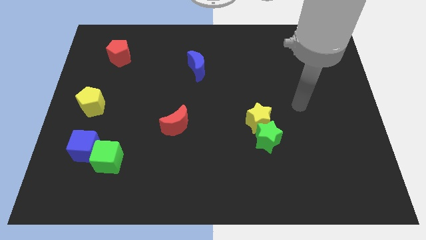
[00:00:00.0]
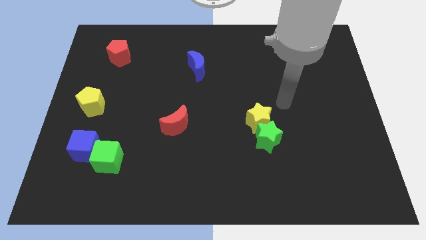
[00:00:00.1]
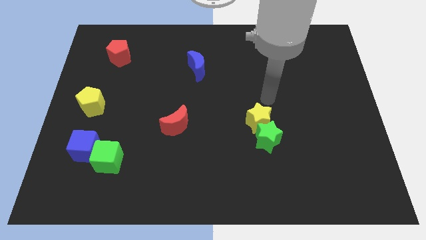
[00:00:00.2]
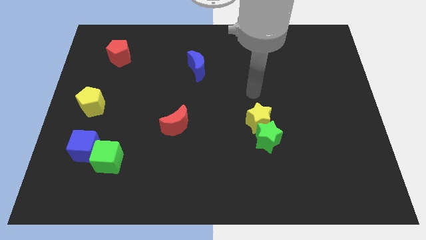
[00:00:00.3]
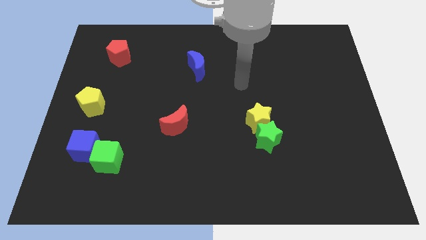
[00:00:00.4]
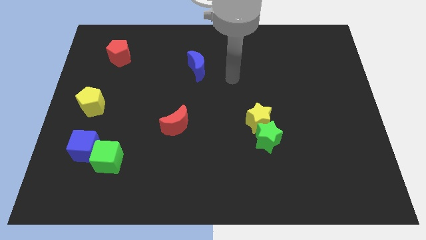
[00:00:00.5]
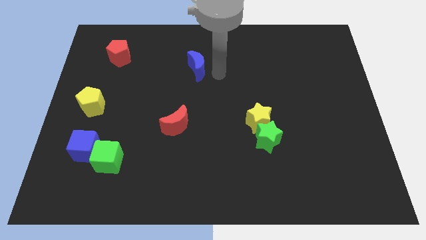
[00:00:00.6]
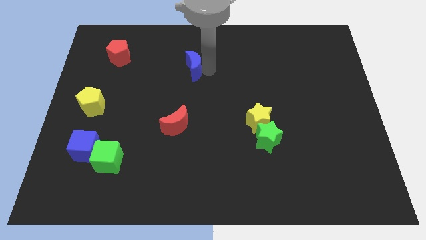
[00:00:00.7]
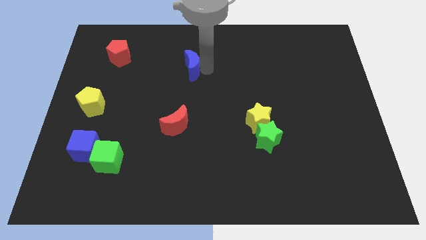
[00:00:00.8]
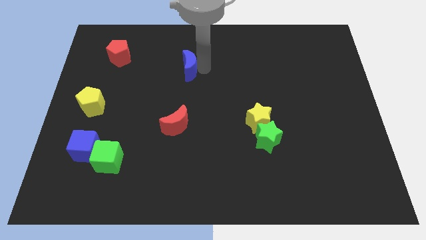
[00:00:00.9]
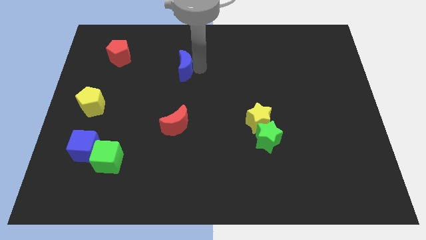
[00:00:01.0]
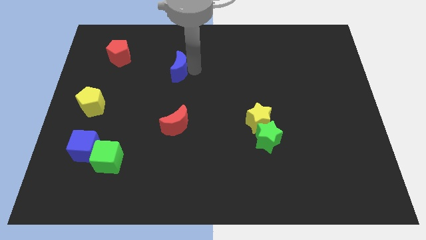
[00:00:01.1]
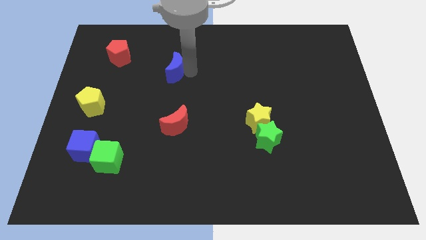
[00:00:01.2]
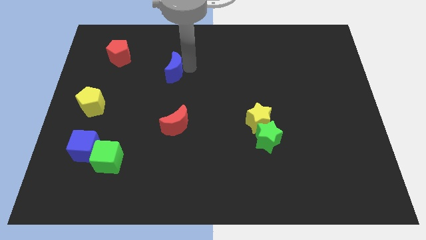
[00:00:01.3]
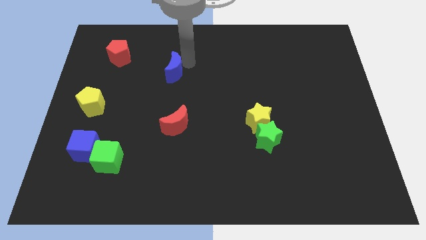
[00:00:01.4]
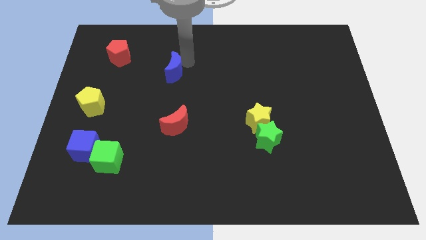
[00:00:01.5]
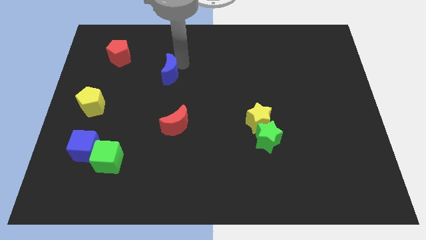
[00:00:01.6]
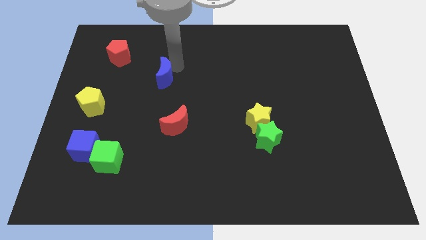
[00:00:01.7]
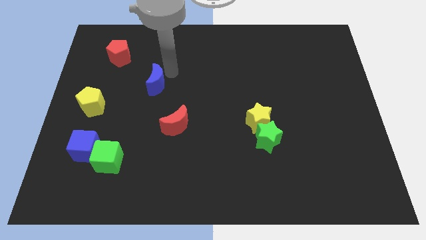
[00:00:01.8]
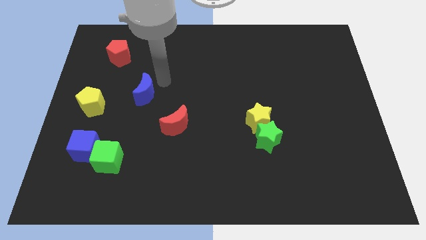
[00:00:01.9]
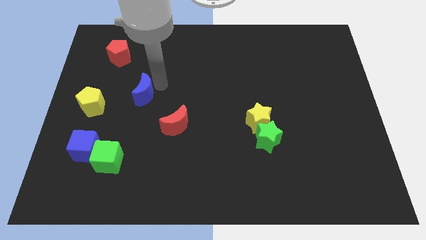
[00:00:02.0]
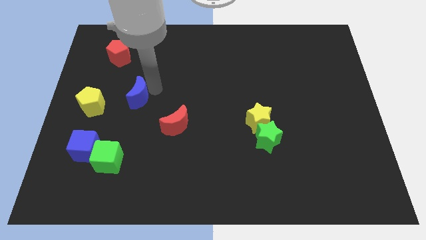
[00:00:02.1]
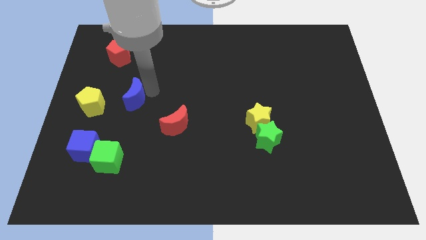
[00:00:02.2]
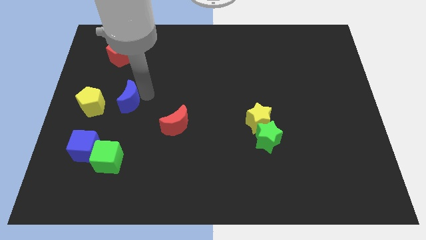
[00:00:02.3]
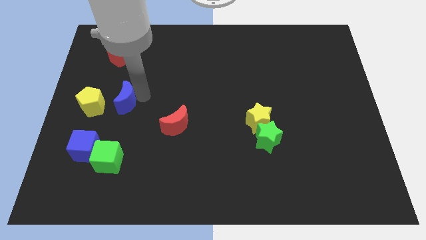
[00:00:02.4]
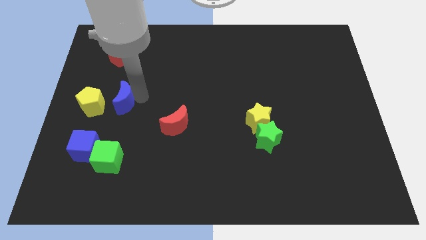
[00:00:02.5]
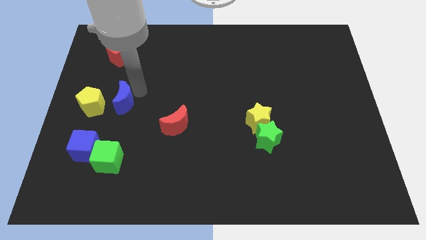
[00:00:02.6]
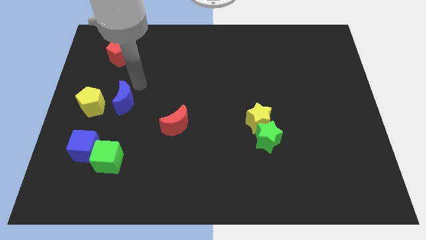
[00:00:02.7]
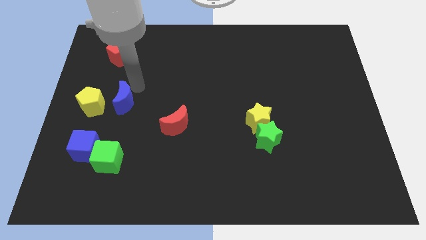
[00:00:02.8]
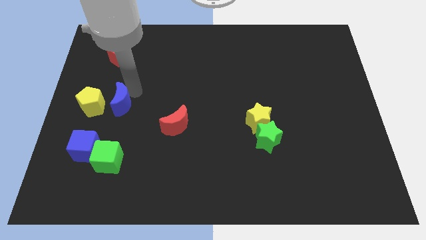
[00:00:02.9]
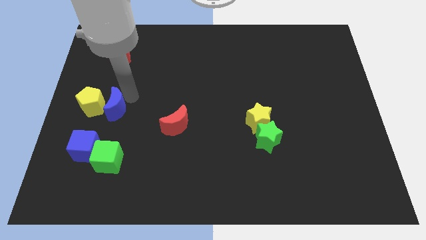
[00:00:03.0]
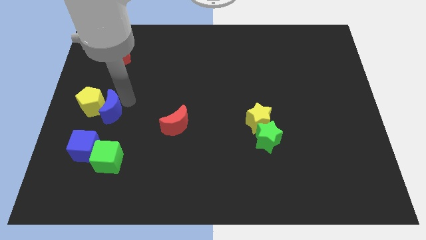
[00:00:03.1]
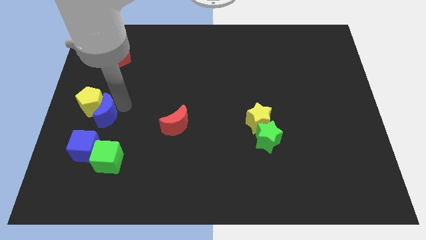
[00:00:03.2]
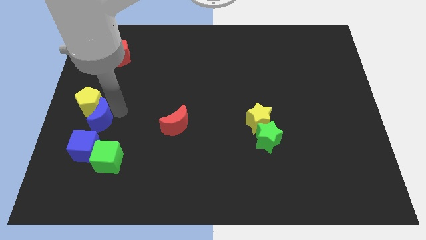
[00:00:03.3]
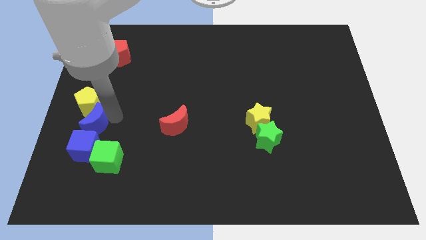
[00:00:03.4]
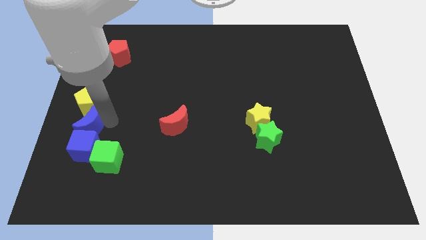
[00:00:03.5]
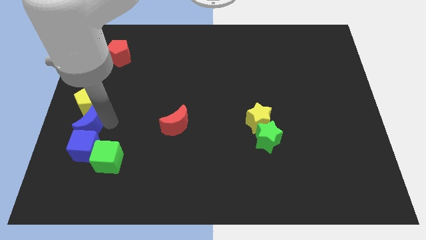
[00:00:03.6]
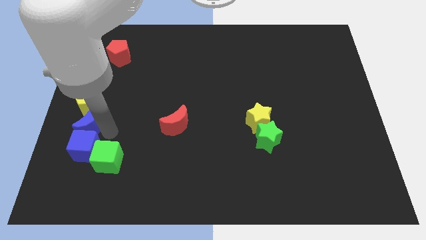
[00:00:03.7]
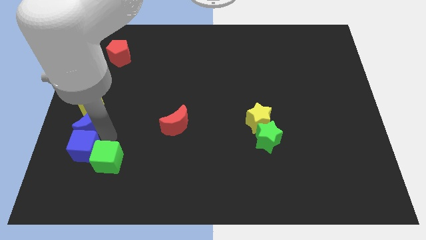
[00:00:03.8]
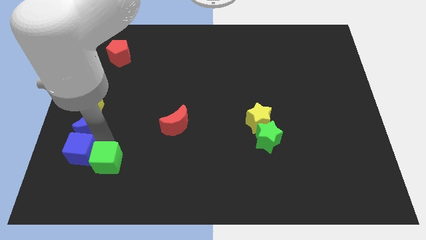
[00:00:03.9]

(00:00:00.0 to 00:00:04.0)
move blue crescent to the top of the blue cube

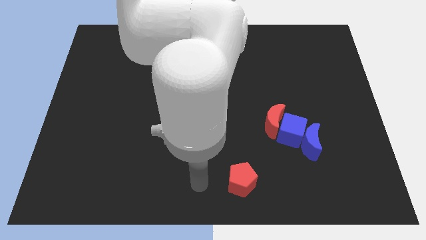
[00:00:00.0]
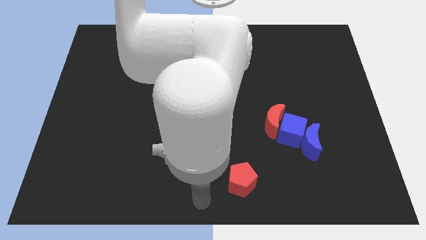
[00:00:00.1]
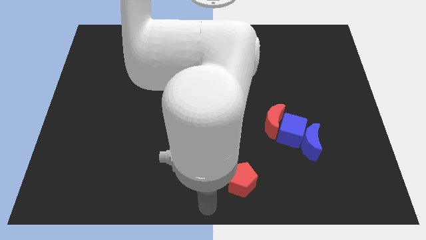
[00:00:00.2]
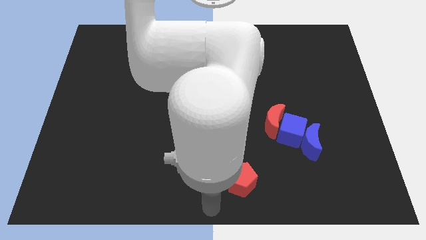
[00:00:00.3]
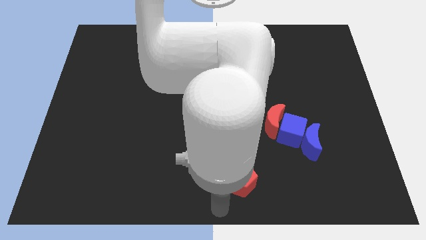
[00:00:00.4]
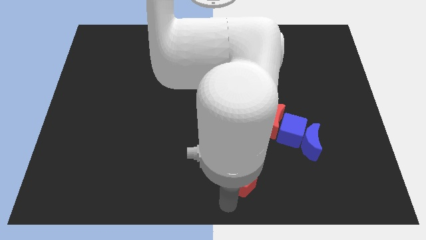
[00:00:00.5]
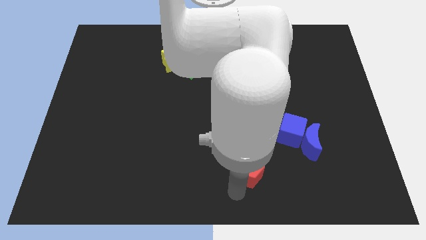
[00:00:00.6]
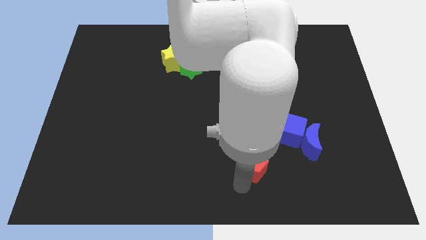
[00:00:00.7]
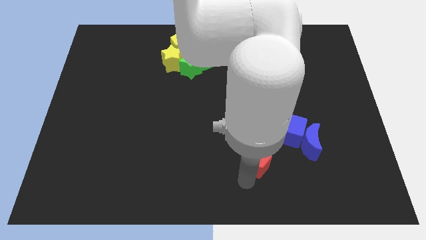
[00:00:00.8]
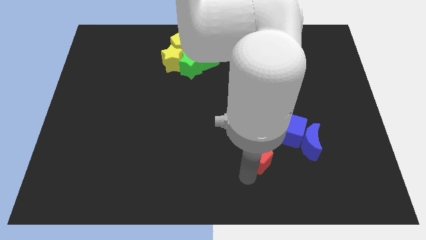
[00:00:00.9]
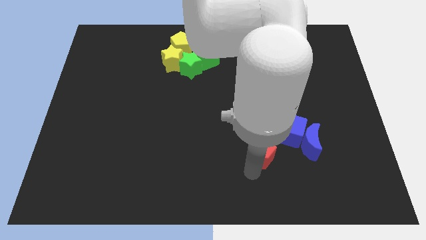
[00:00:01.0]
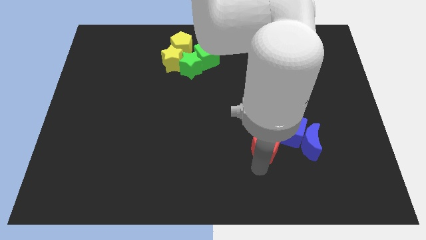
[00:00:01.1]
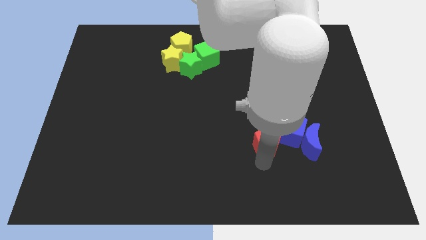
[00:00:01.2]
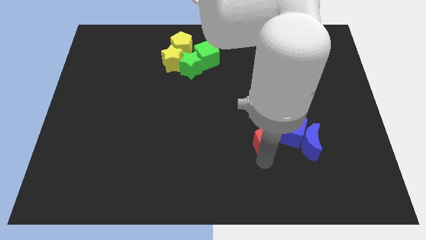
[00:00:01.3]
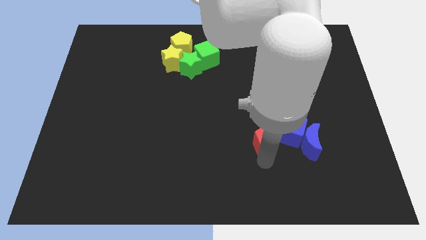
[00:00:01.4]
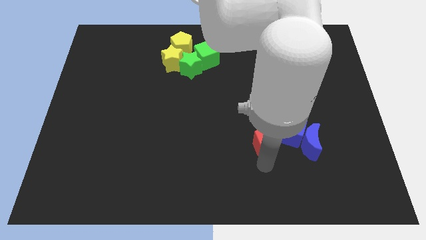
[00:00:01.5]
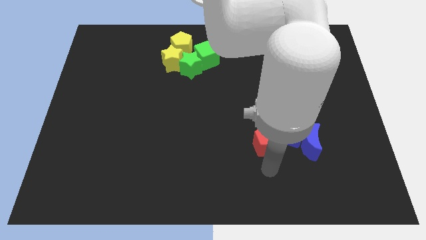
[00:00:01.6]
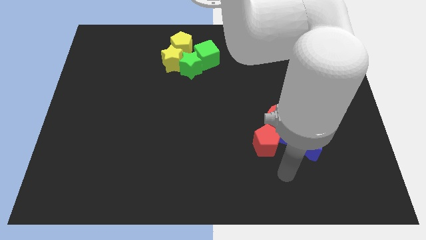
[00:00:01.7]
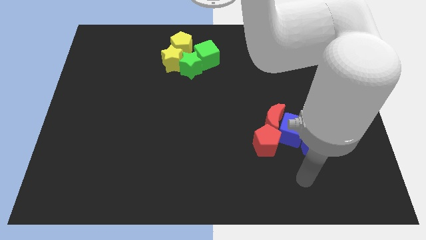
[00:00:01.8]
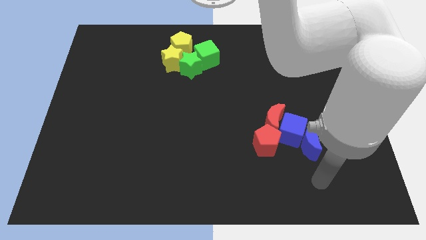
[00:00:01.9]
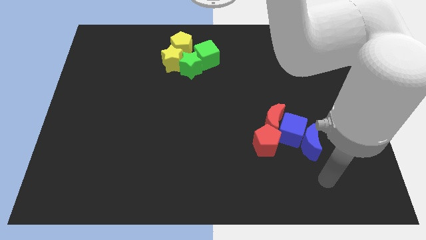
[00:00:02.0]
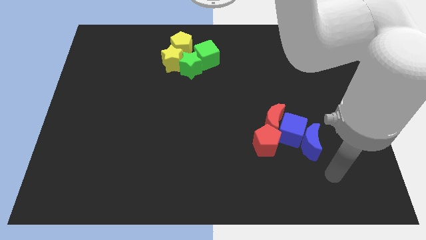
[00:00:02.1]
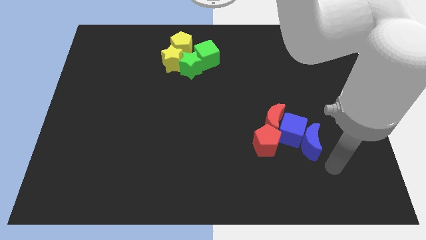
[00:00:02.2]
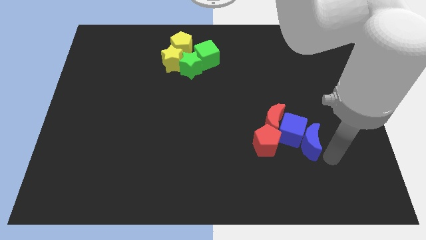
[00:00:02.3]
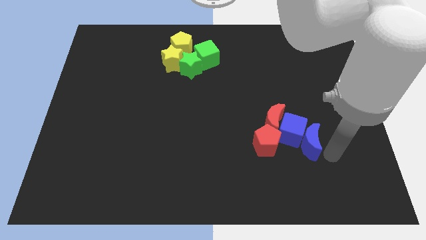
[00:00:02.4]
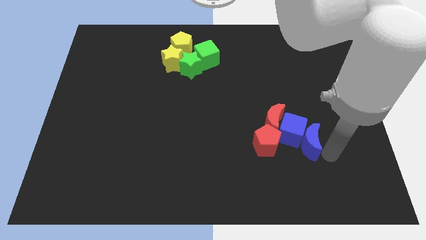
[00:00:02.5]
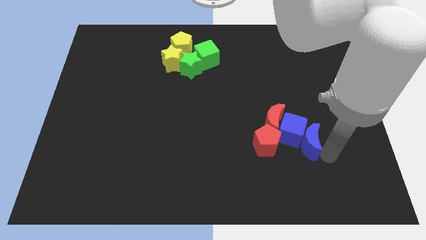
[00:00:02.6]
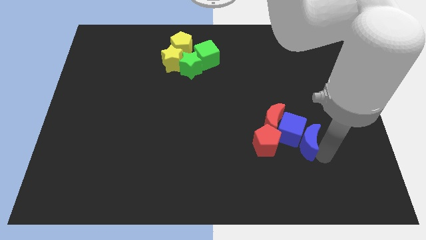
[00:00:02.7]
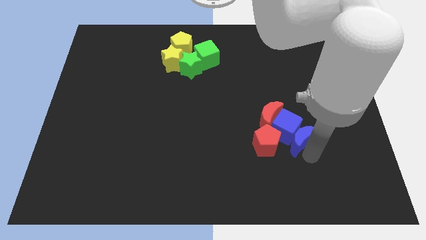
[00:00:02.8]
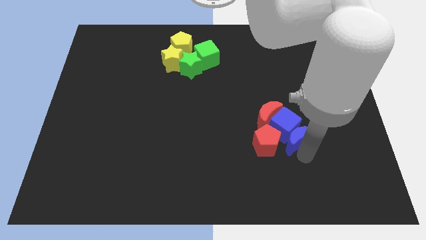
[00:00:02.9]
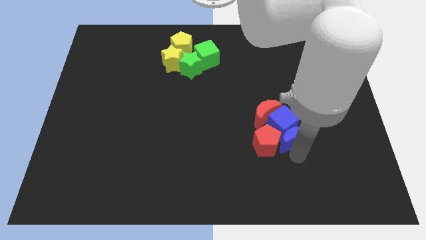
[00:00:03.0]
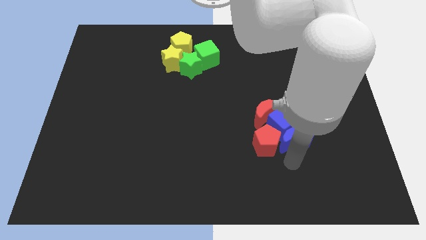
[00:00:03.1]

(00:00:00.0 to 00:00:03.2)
make the blue crescent and red pentagon towards blue cube

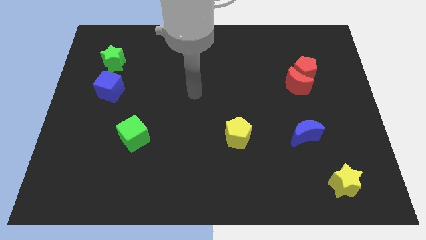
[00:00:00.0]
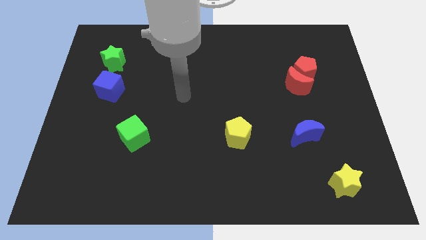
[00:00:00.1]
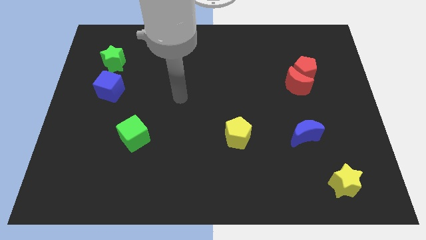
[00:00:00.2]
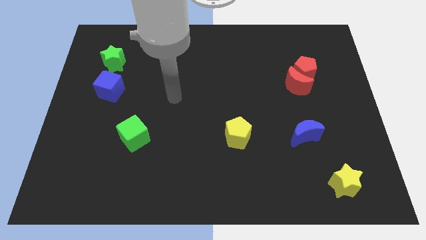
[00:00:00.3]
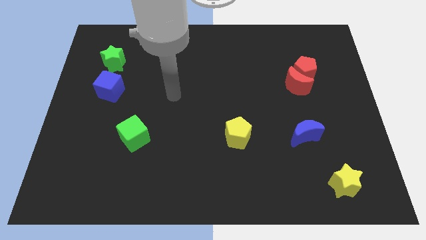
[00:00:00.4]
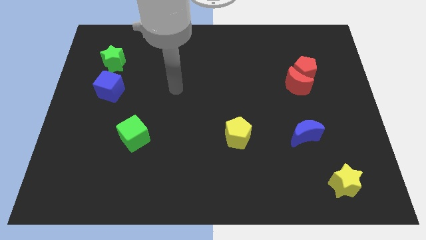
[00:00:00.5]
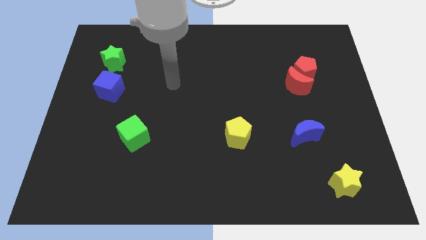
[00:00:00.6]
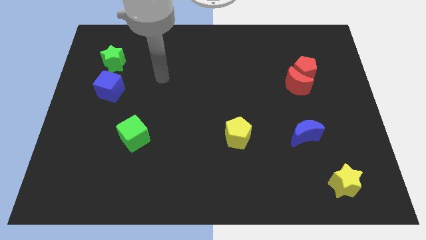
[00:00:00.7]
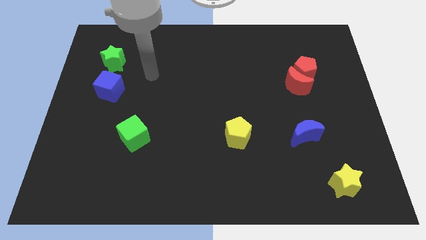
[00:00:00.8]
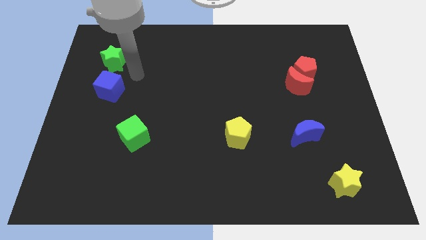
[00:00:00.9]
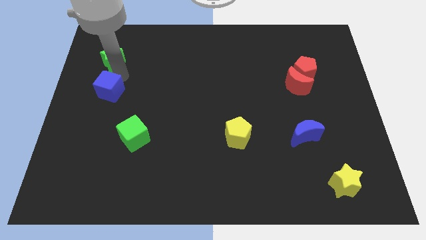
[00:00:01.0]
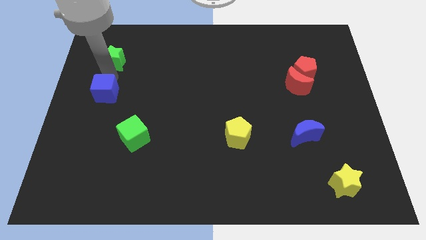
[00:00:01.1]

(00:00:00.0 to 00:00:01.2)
place your arm to the top of blue cube

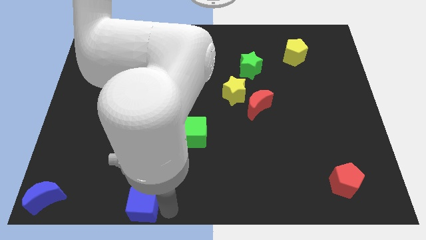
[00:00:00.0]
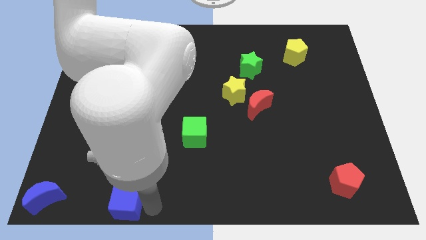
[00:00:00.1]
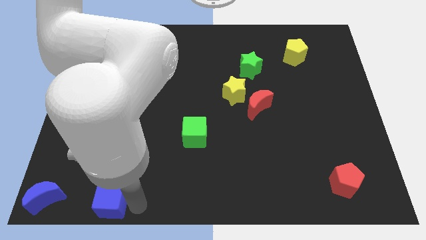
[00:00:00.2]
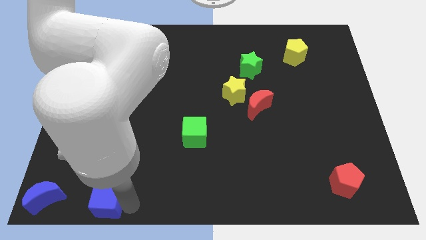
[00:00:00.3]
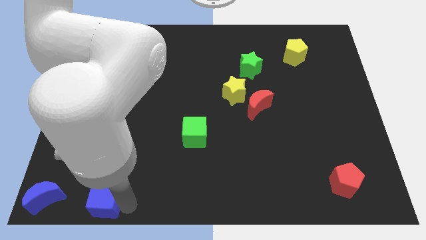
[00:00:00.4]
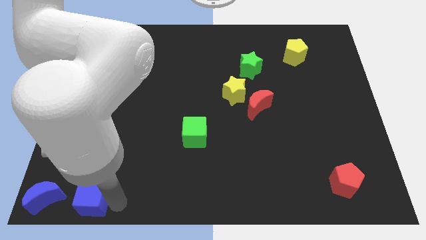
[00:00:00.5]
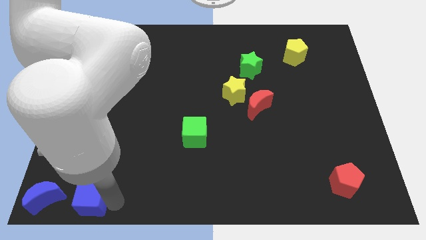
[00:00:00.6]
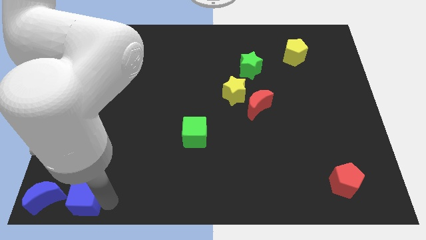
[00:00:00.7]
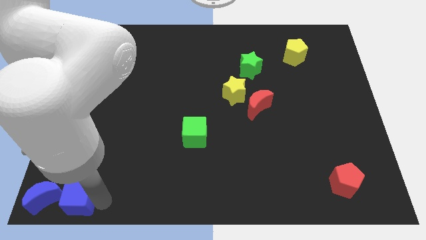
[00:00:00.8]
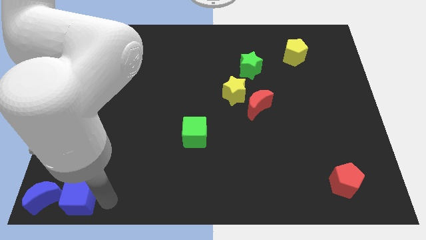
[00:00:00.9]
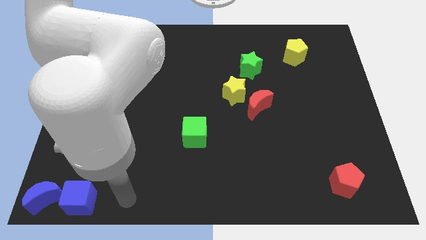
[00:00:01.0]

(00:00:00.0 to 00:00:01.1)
slide blue cube into blue moon
